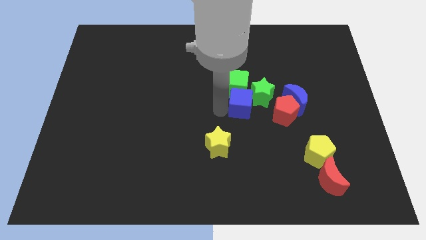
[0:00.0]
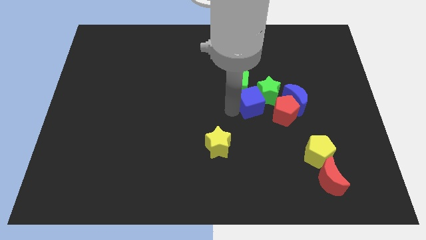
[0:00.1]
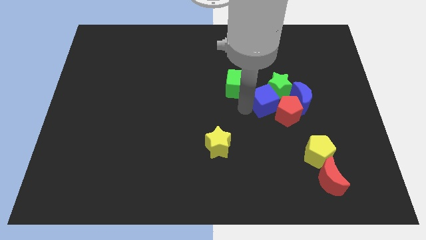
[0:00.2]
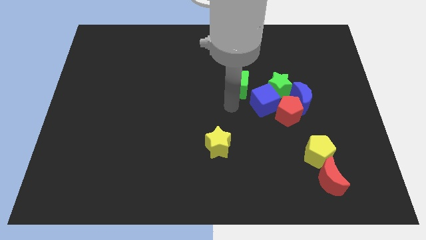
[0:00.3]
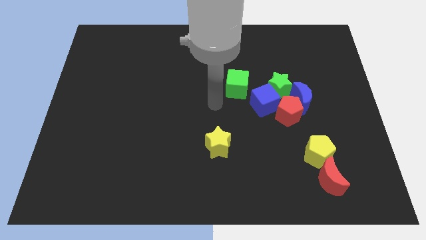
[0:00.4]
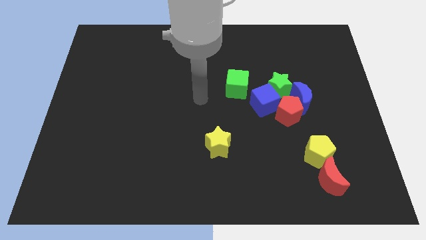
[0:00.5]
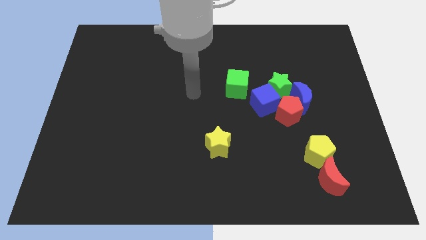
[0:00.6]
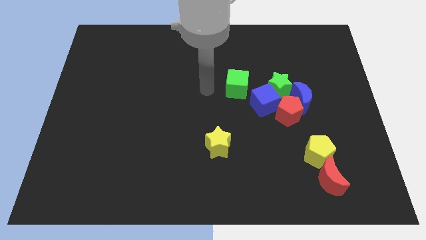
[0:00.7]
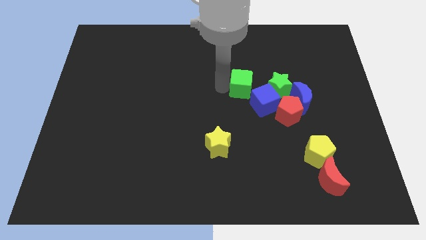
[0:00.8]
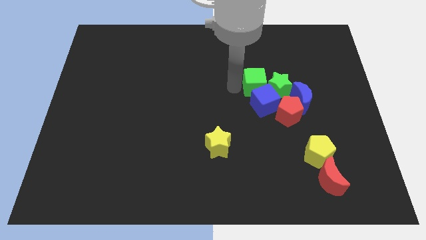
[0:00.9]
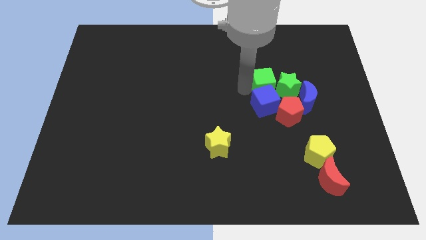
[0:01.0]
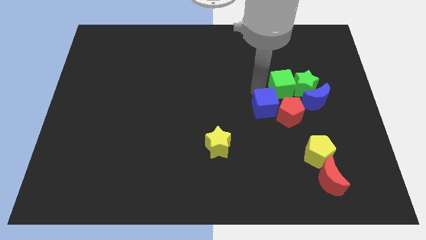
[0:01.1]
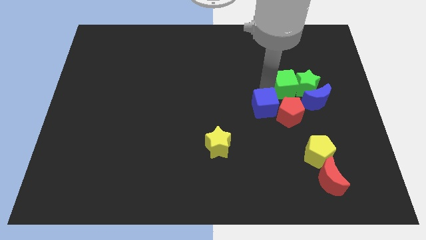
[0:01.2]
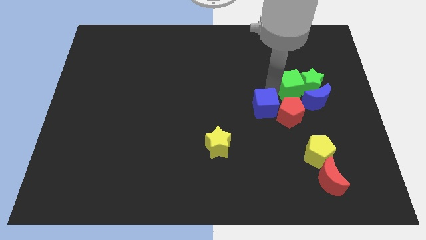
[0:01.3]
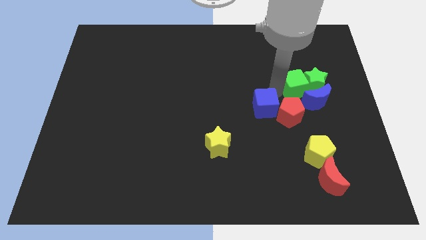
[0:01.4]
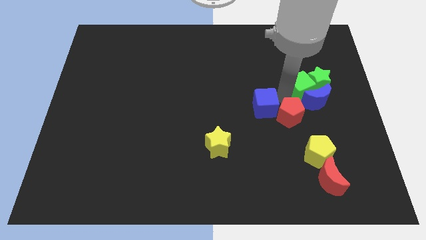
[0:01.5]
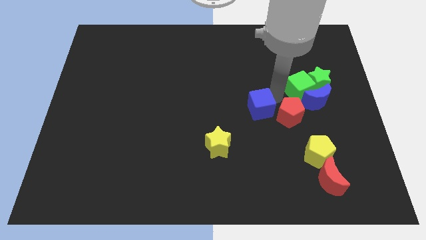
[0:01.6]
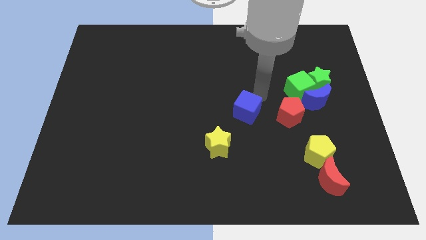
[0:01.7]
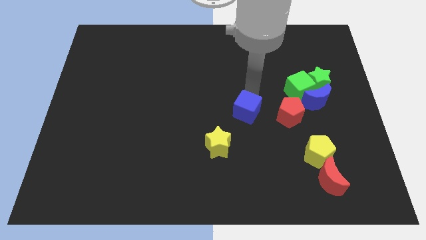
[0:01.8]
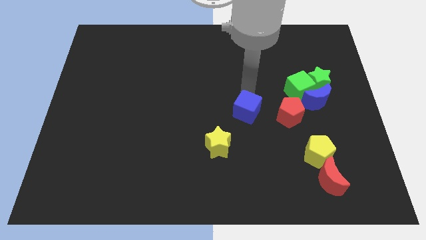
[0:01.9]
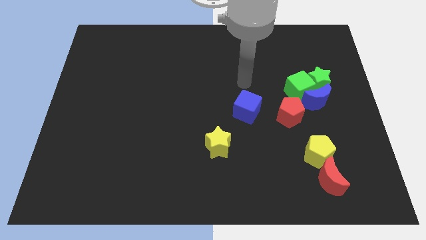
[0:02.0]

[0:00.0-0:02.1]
separate the green blocks from blue cube

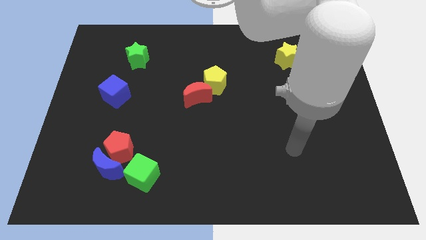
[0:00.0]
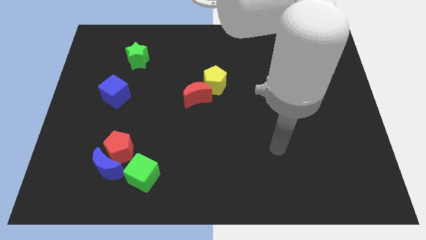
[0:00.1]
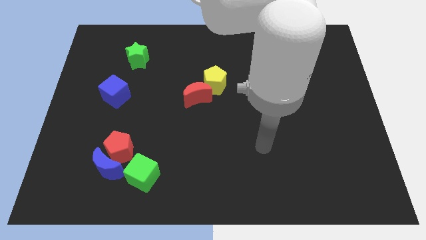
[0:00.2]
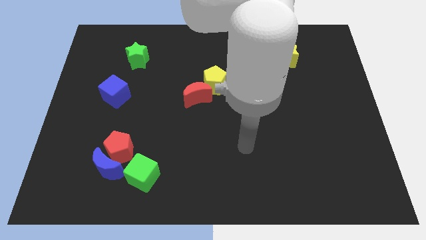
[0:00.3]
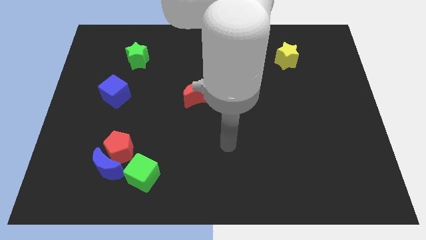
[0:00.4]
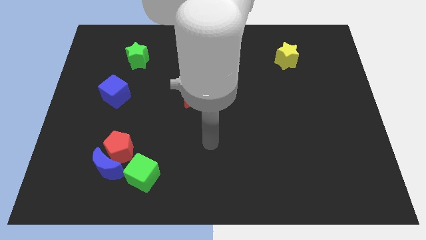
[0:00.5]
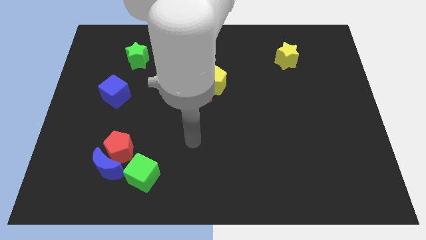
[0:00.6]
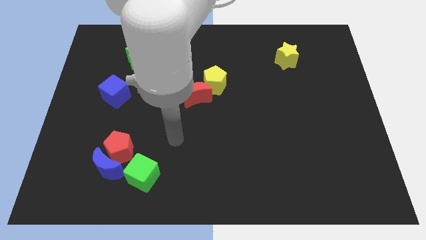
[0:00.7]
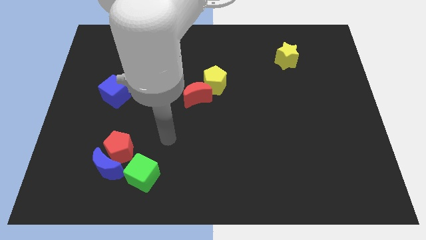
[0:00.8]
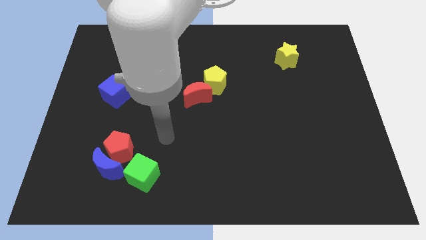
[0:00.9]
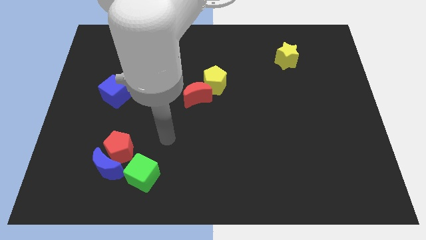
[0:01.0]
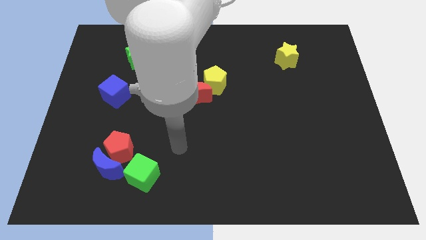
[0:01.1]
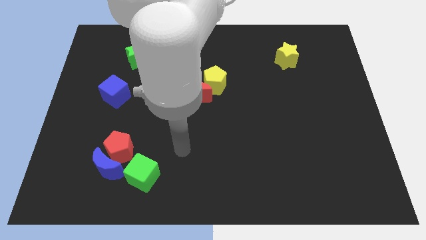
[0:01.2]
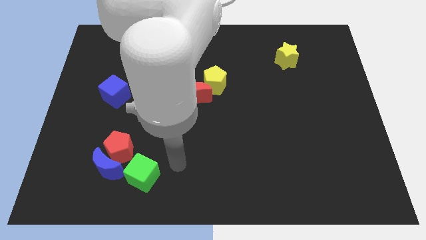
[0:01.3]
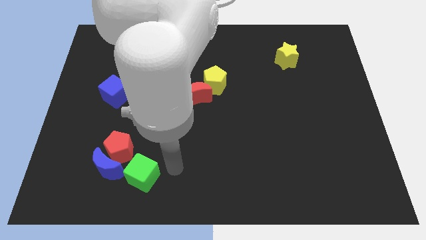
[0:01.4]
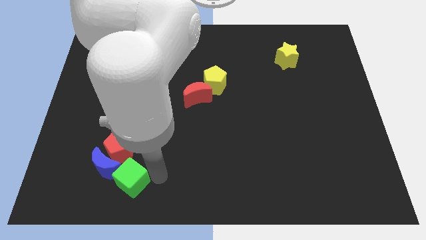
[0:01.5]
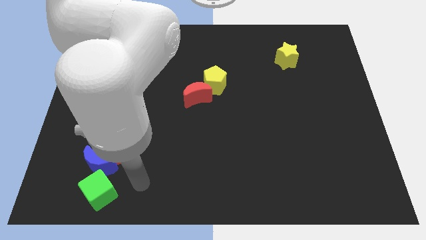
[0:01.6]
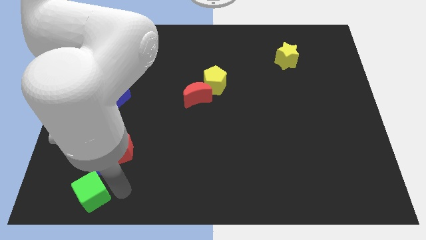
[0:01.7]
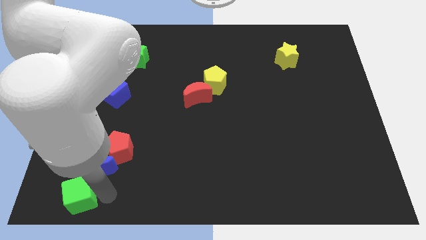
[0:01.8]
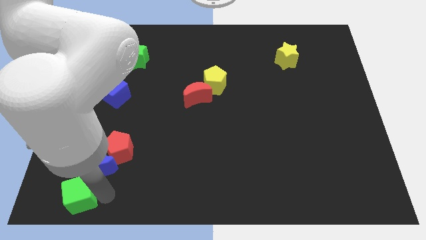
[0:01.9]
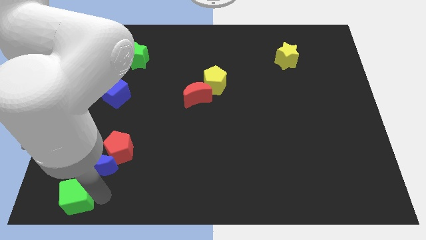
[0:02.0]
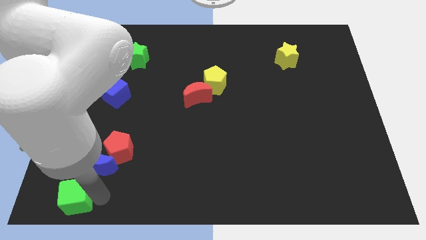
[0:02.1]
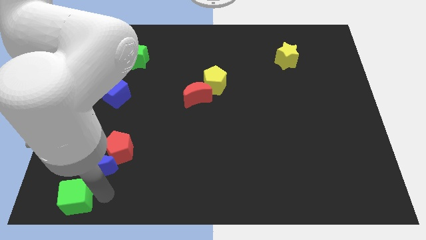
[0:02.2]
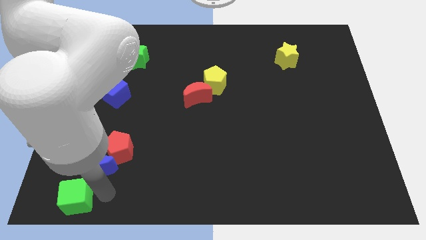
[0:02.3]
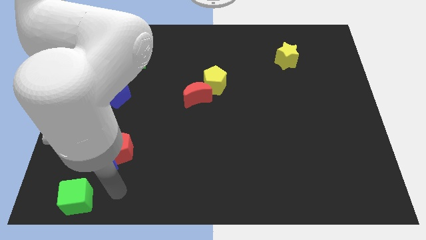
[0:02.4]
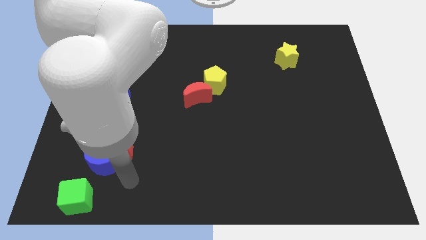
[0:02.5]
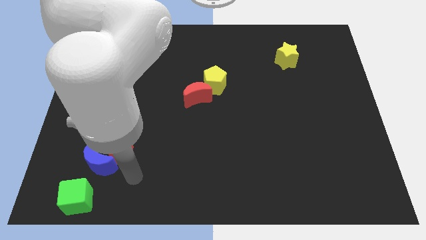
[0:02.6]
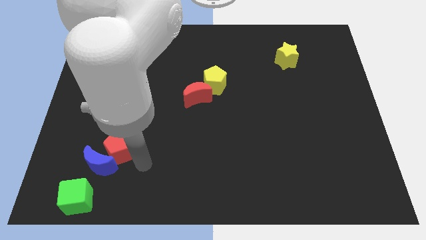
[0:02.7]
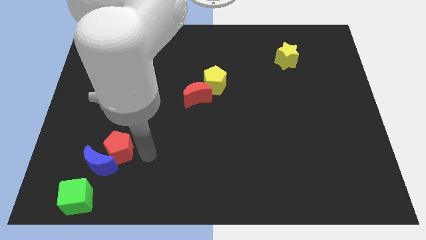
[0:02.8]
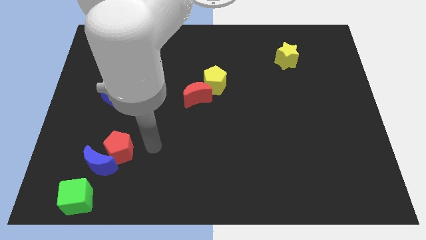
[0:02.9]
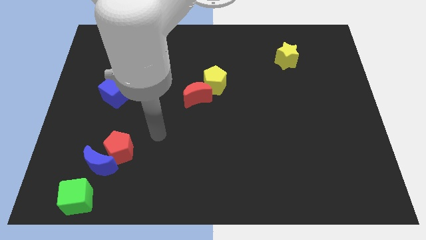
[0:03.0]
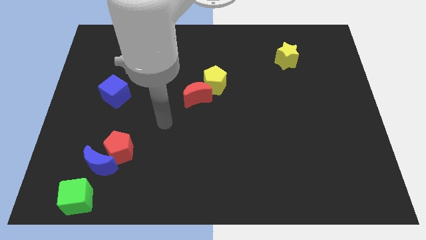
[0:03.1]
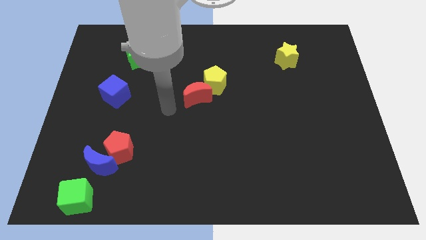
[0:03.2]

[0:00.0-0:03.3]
move the green cube diagonal below blue moon

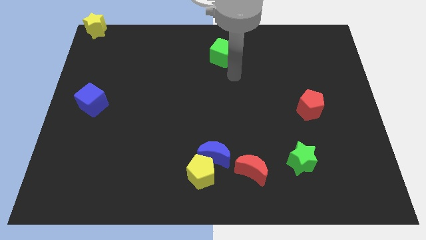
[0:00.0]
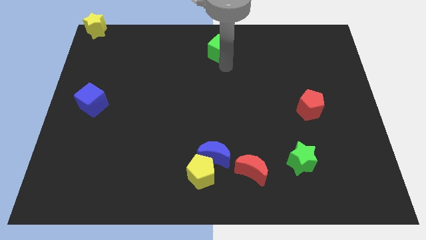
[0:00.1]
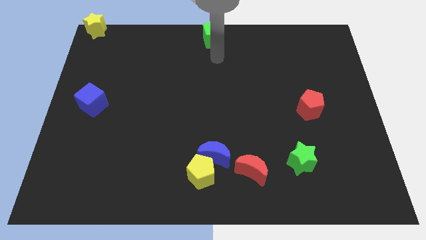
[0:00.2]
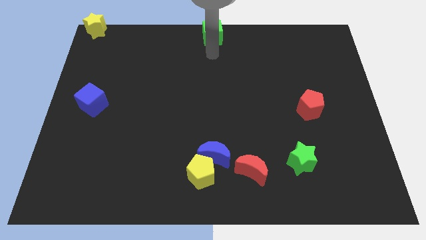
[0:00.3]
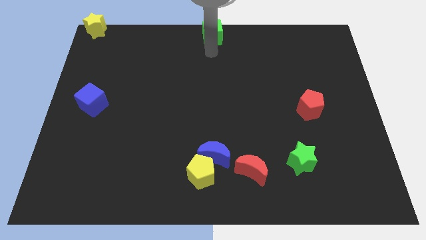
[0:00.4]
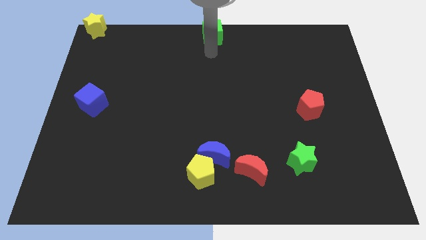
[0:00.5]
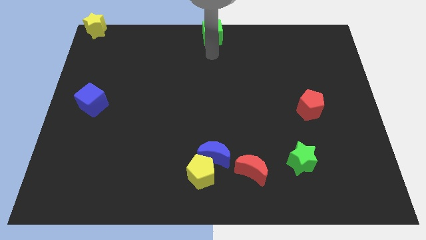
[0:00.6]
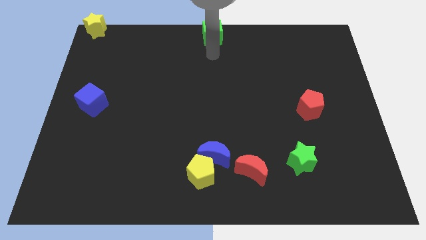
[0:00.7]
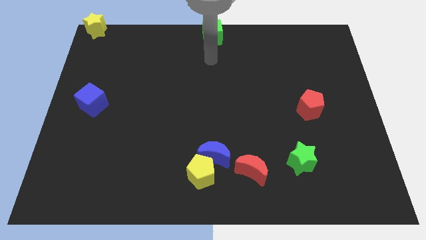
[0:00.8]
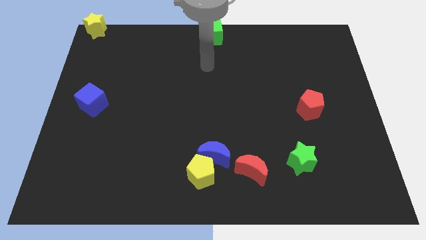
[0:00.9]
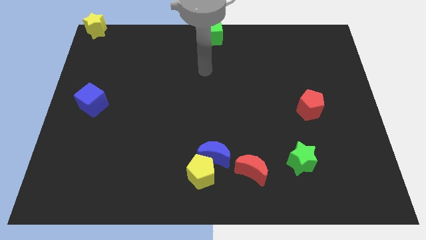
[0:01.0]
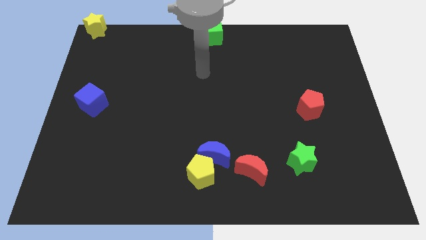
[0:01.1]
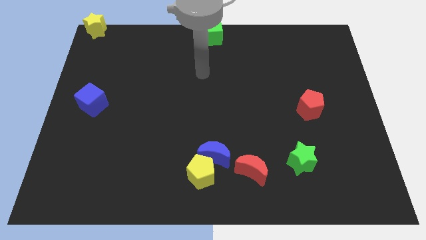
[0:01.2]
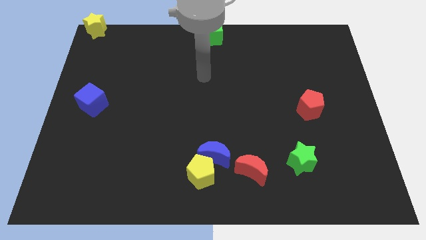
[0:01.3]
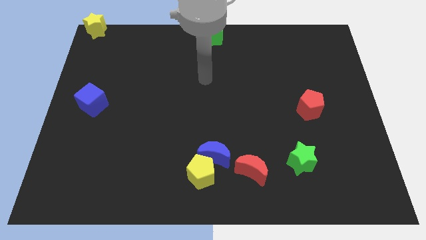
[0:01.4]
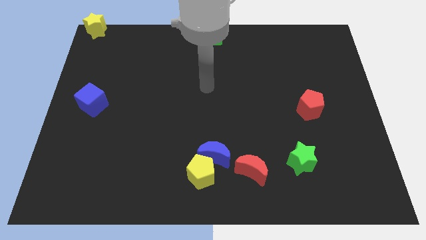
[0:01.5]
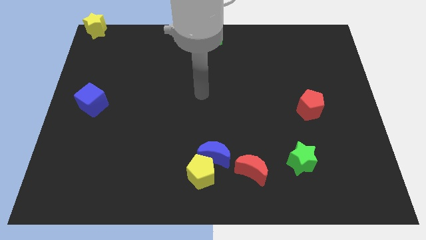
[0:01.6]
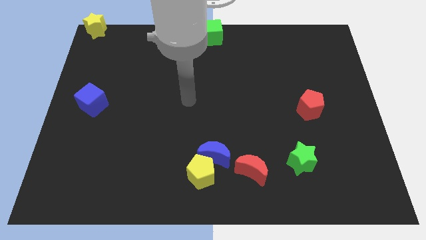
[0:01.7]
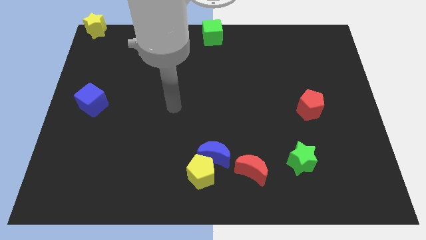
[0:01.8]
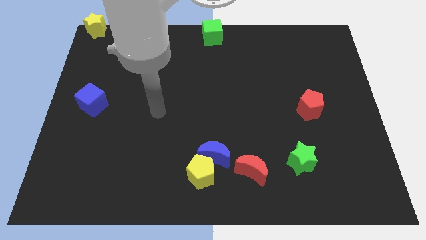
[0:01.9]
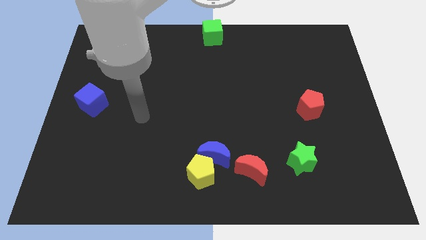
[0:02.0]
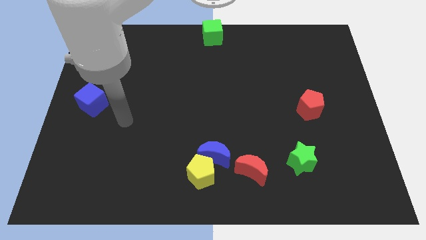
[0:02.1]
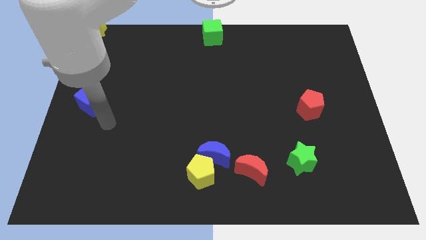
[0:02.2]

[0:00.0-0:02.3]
move your arm away from the green cube

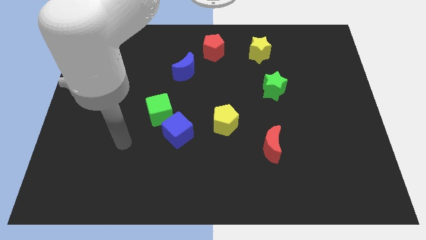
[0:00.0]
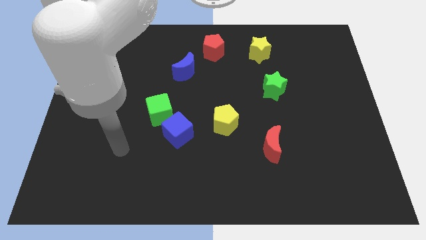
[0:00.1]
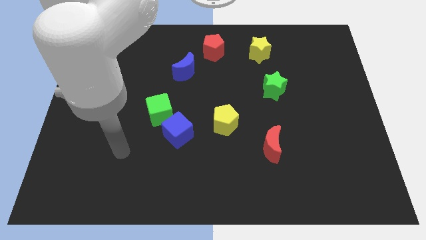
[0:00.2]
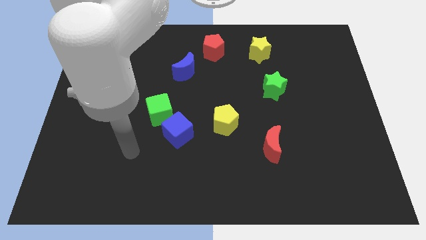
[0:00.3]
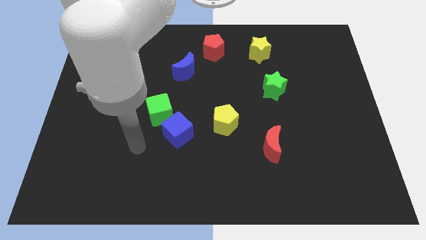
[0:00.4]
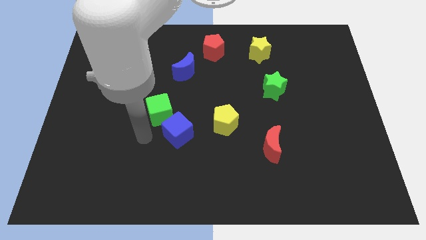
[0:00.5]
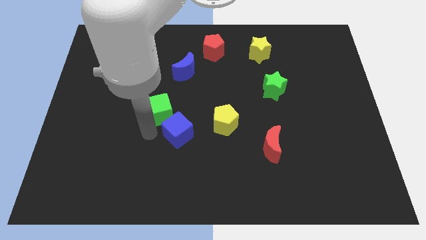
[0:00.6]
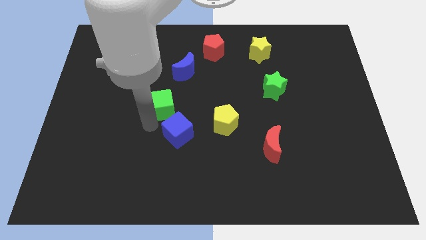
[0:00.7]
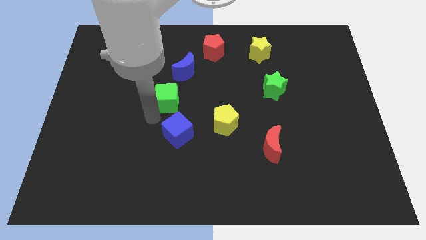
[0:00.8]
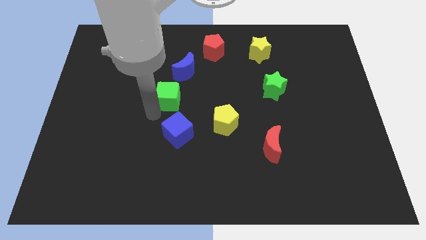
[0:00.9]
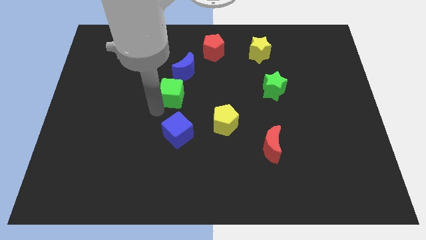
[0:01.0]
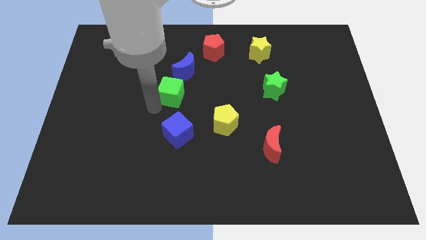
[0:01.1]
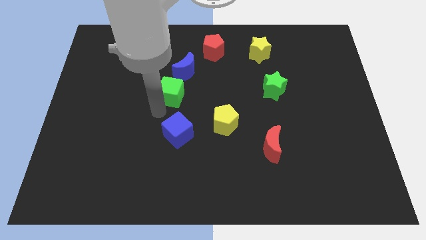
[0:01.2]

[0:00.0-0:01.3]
place the green cube towards the bottom left side of the blue crescent
